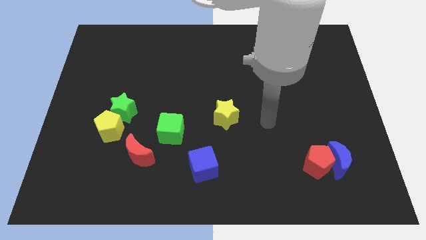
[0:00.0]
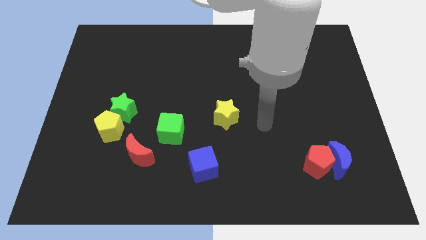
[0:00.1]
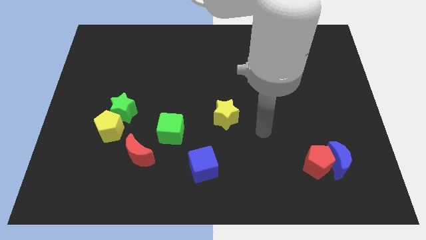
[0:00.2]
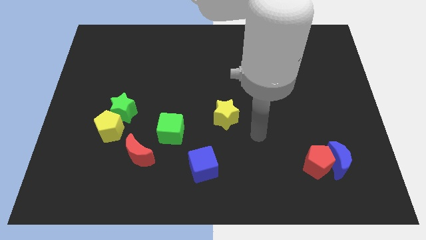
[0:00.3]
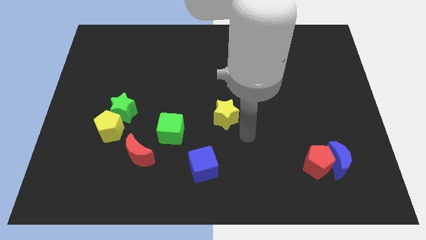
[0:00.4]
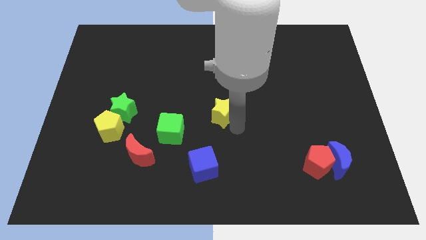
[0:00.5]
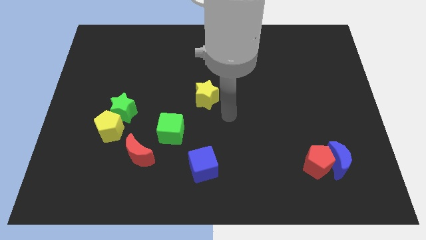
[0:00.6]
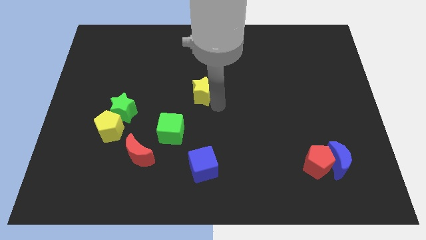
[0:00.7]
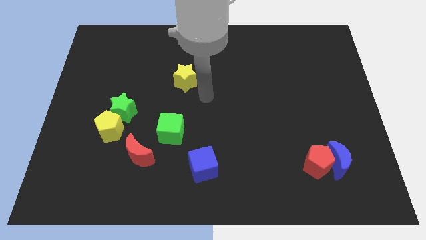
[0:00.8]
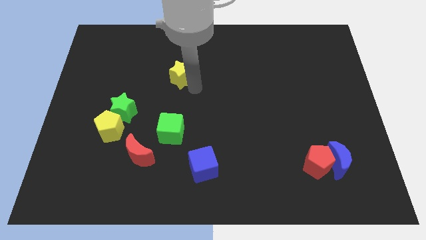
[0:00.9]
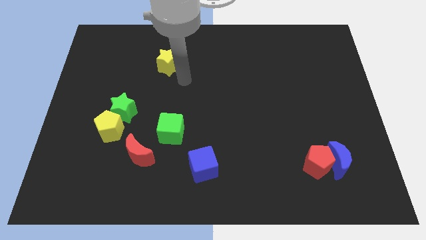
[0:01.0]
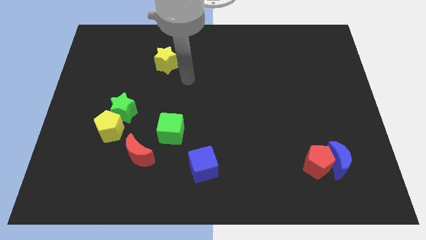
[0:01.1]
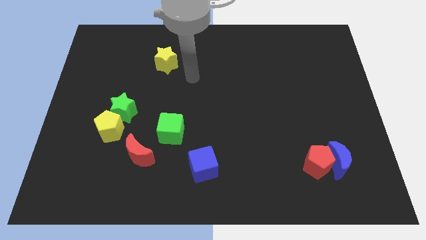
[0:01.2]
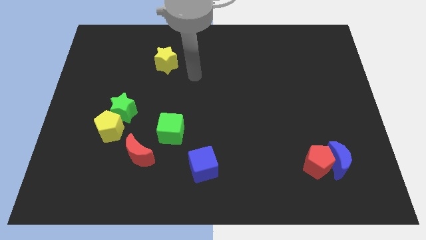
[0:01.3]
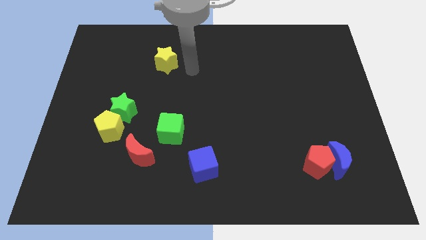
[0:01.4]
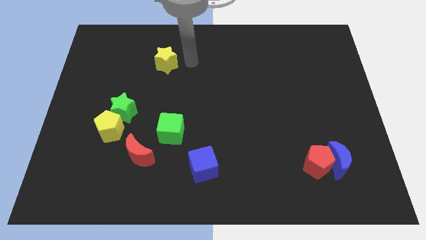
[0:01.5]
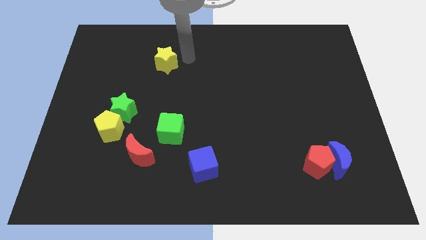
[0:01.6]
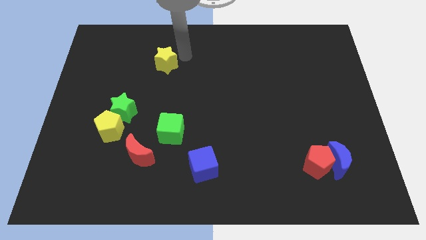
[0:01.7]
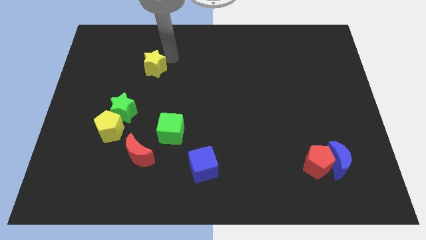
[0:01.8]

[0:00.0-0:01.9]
push the yellow star above green cube

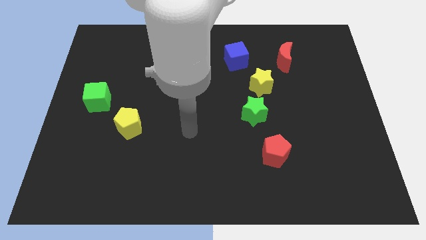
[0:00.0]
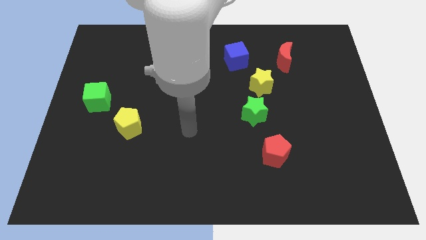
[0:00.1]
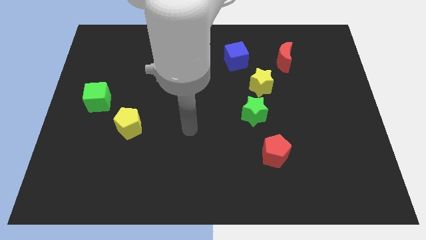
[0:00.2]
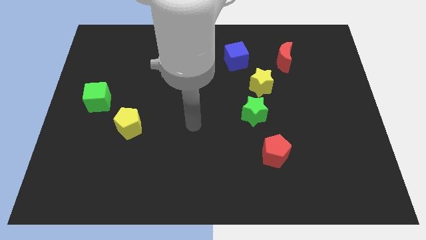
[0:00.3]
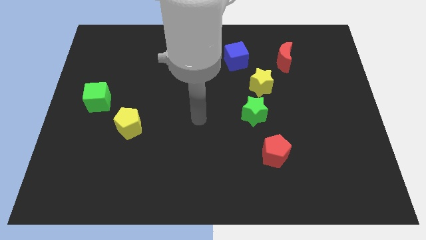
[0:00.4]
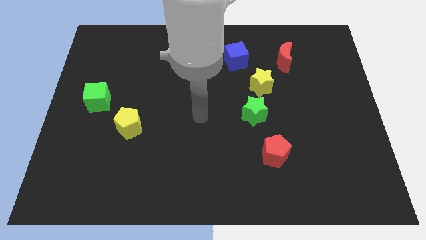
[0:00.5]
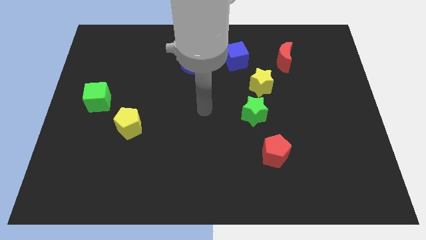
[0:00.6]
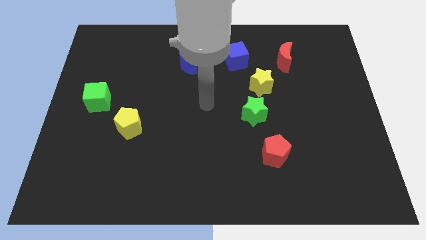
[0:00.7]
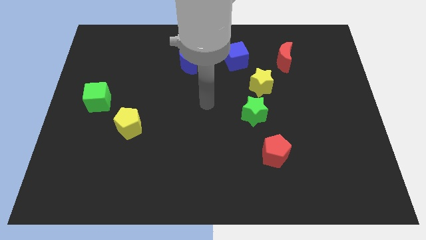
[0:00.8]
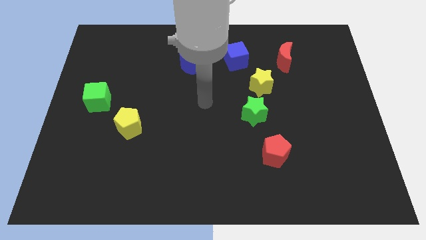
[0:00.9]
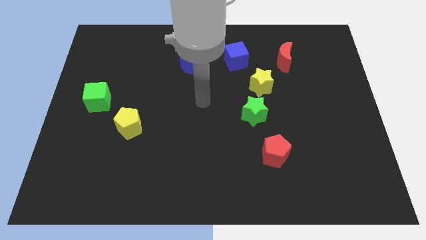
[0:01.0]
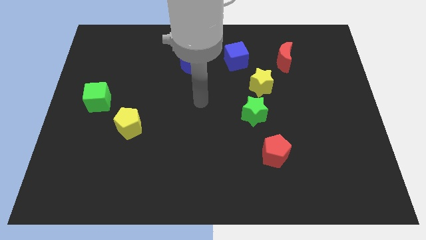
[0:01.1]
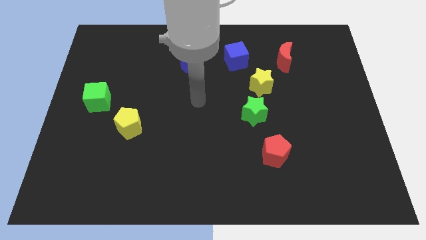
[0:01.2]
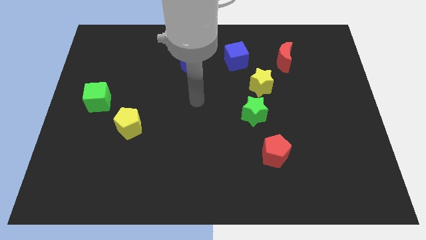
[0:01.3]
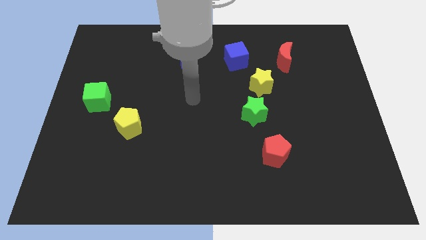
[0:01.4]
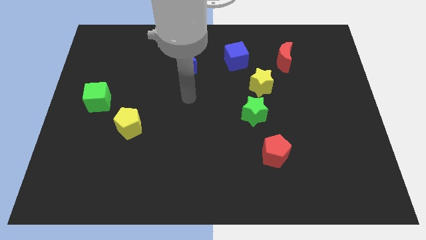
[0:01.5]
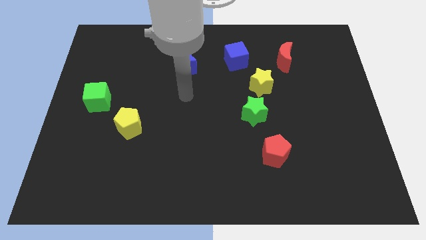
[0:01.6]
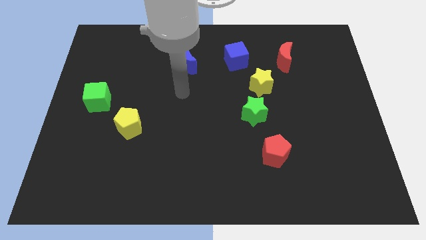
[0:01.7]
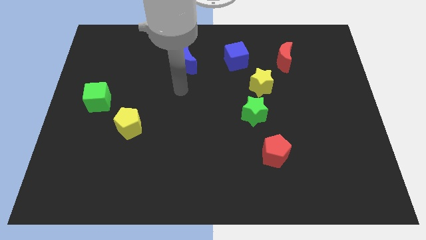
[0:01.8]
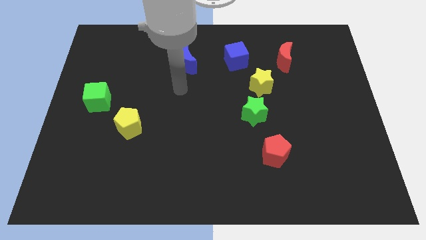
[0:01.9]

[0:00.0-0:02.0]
place your arm below the blue crescent

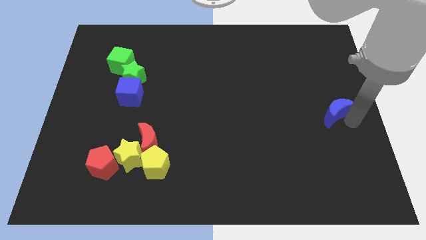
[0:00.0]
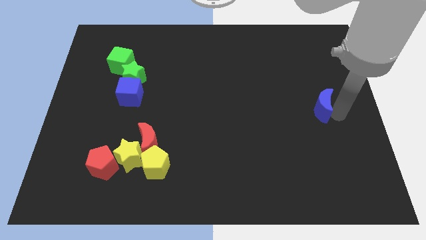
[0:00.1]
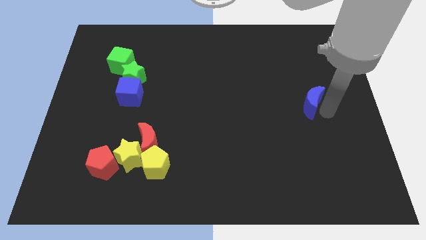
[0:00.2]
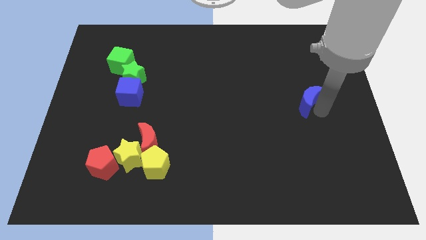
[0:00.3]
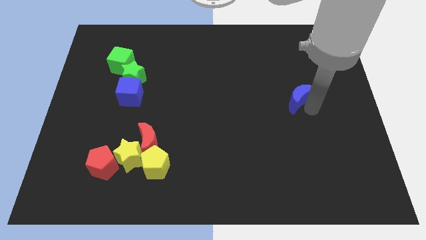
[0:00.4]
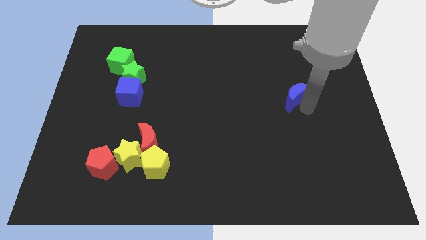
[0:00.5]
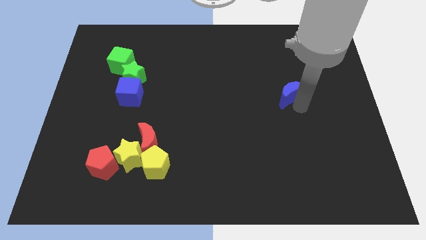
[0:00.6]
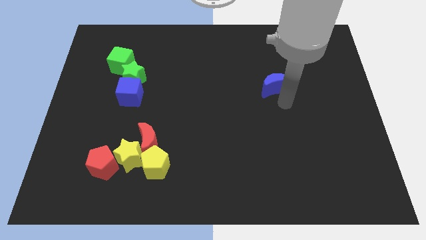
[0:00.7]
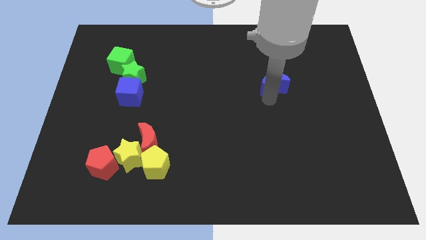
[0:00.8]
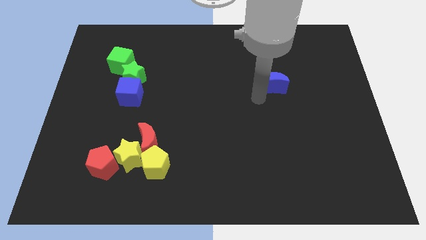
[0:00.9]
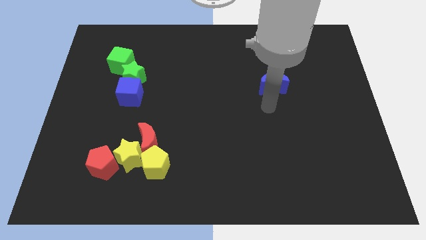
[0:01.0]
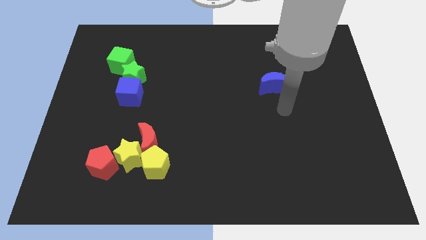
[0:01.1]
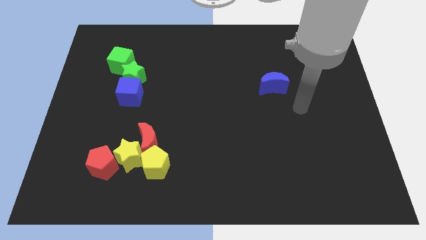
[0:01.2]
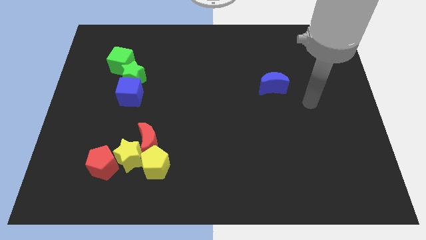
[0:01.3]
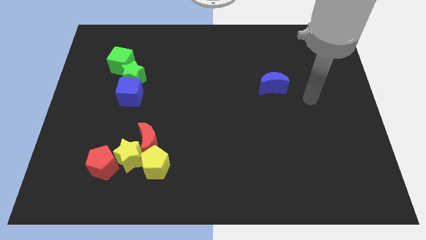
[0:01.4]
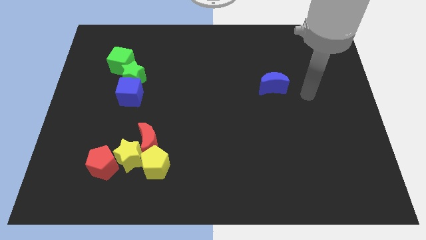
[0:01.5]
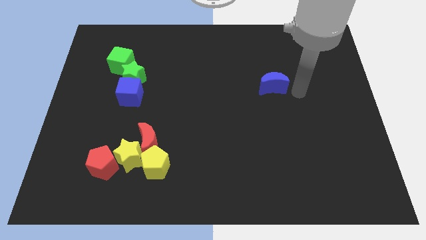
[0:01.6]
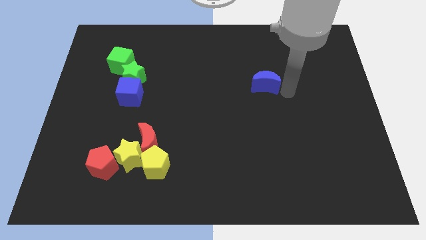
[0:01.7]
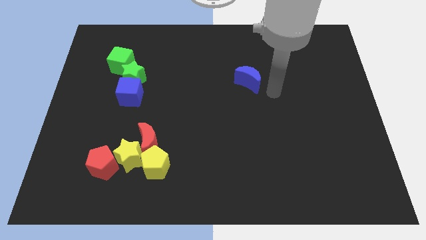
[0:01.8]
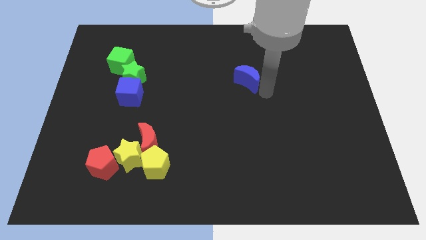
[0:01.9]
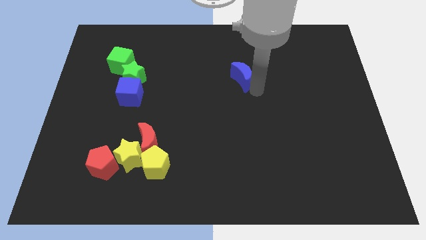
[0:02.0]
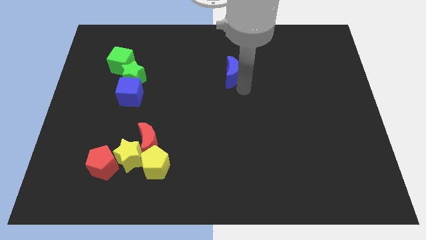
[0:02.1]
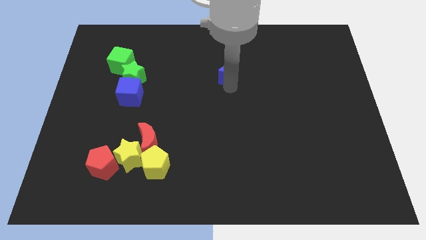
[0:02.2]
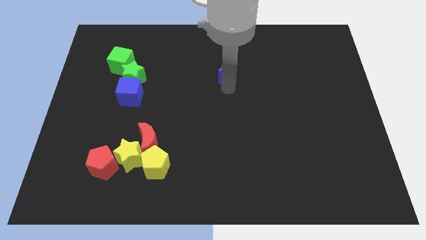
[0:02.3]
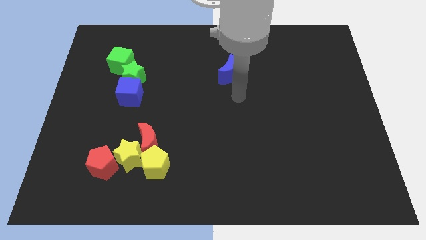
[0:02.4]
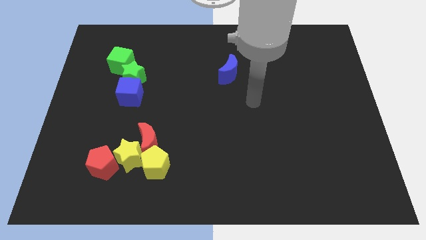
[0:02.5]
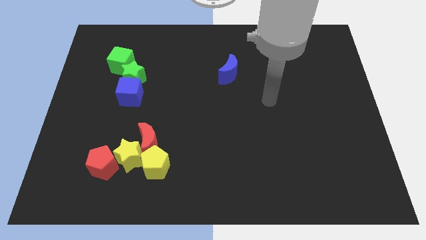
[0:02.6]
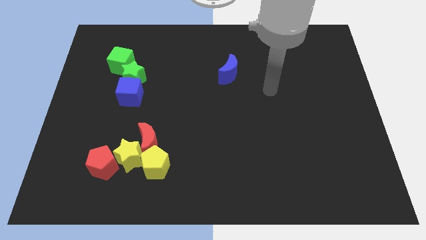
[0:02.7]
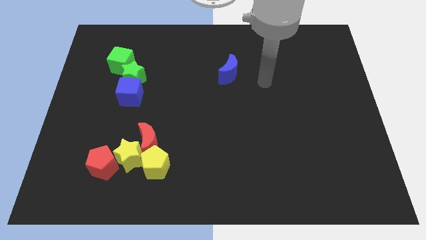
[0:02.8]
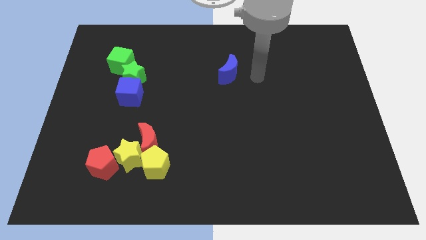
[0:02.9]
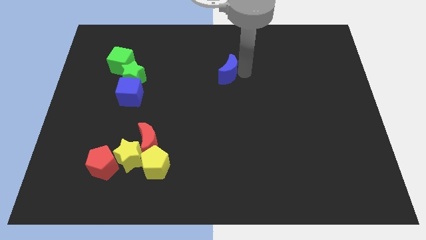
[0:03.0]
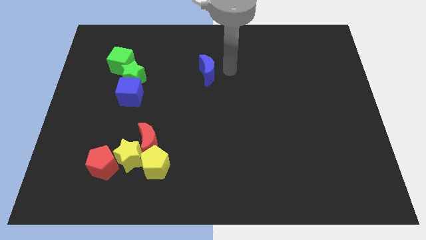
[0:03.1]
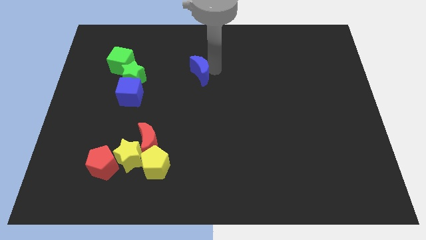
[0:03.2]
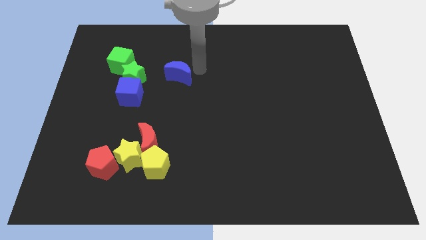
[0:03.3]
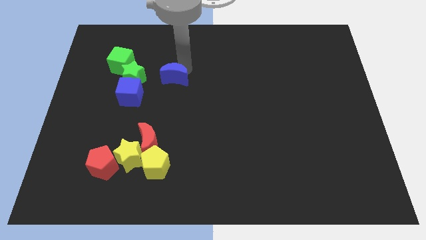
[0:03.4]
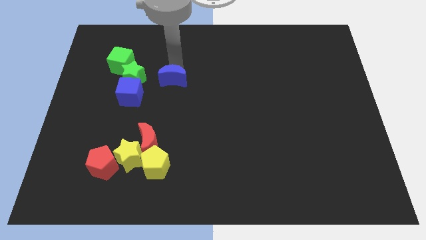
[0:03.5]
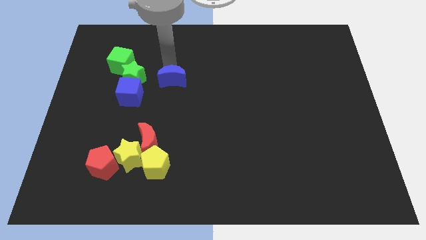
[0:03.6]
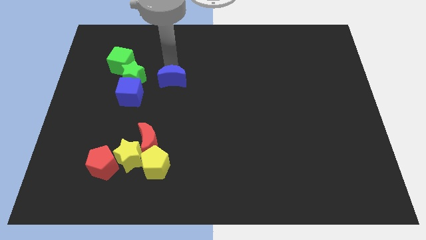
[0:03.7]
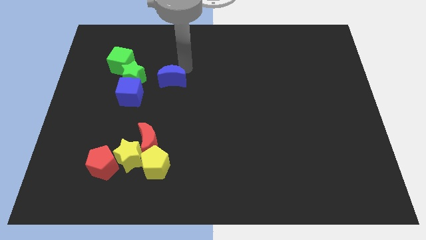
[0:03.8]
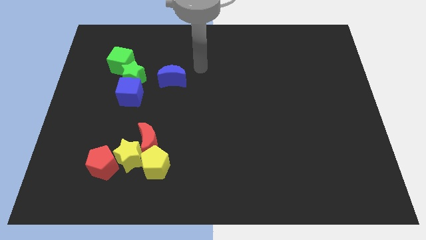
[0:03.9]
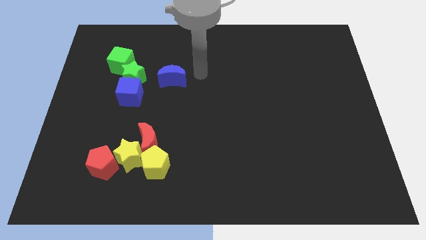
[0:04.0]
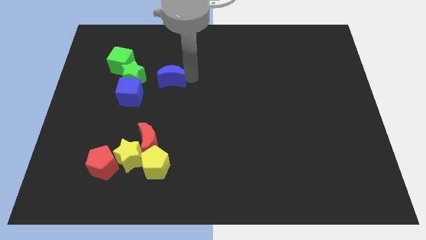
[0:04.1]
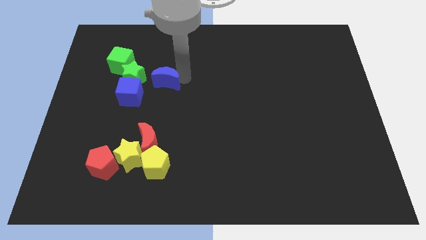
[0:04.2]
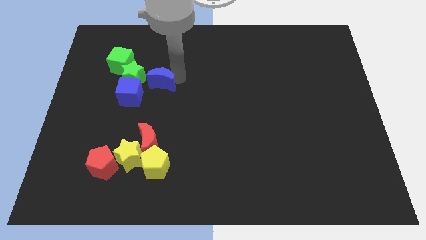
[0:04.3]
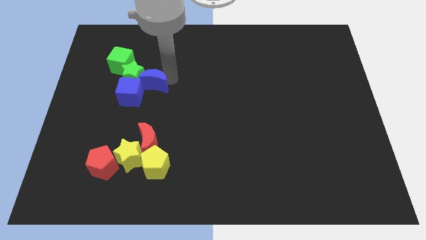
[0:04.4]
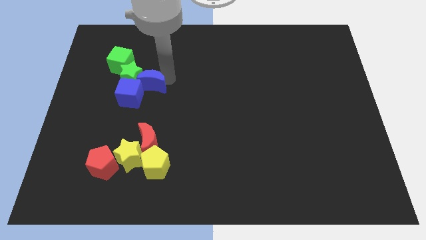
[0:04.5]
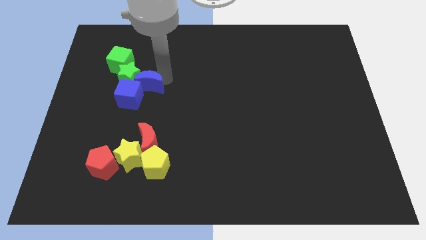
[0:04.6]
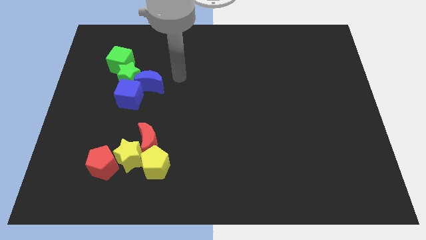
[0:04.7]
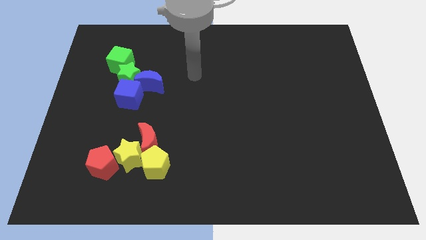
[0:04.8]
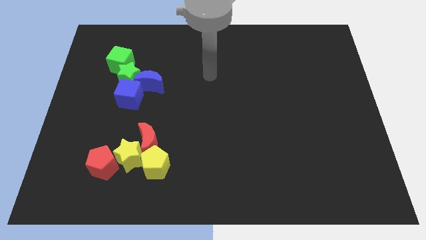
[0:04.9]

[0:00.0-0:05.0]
push the blue crescent into the green blocks

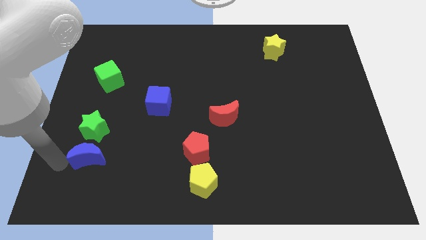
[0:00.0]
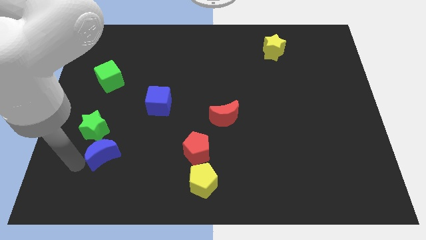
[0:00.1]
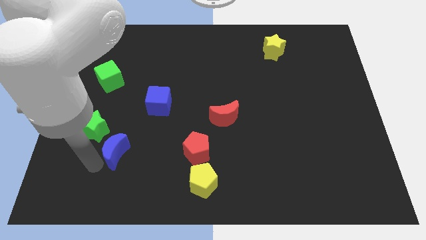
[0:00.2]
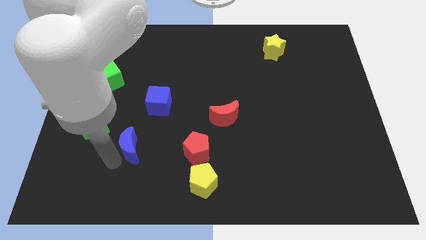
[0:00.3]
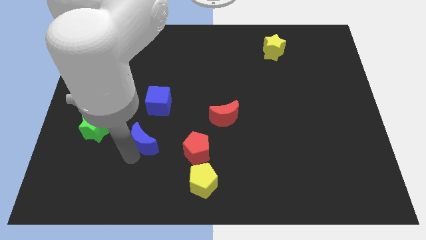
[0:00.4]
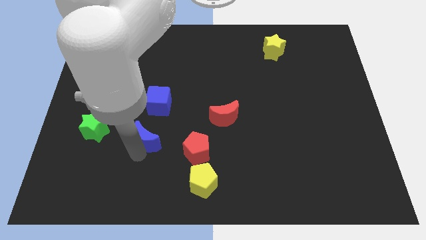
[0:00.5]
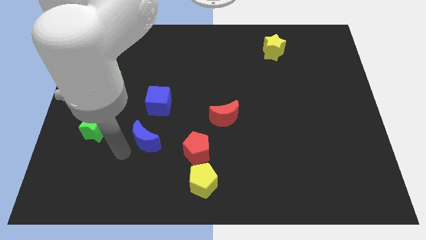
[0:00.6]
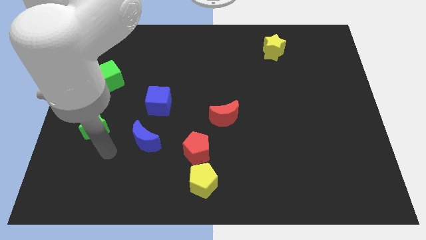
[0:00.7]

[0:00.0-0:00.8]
move the blue crescent below the blue cube
